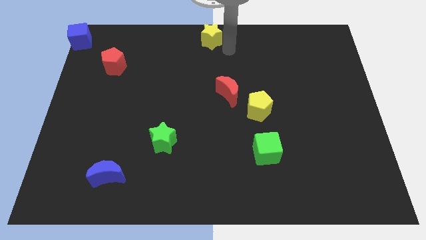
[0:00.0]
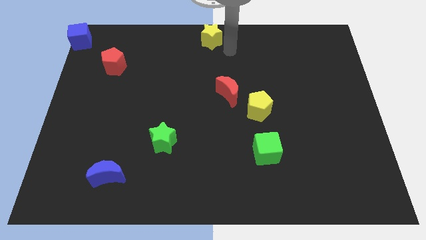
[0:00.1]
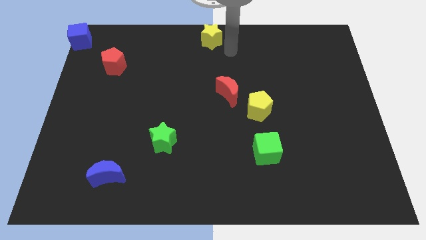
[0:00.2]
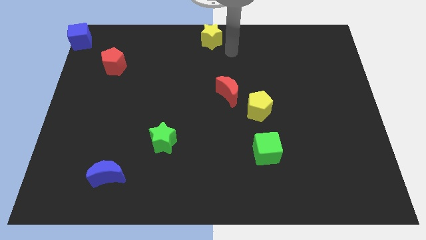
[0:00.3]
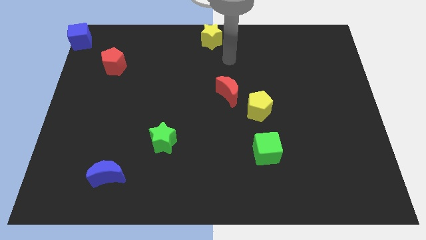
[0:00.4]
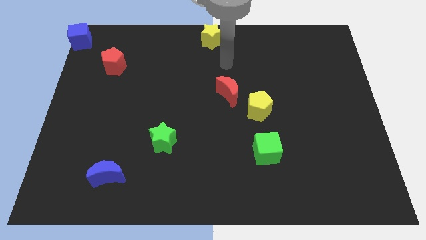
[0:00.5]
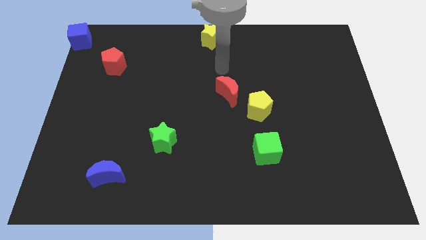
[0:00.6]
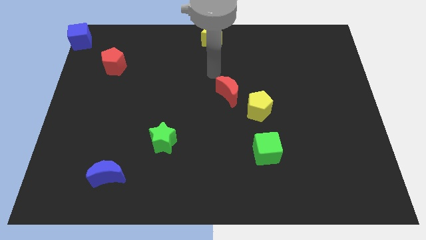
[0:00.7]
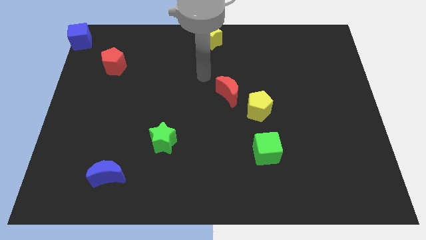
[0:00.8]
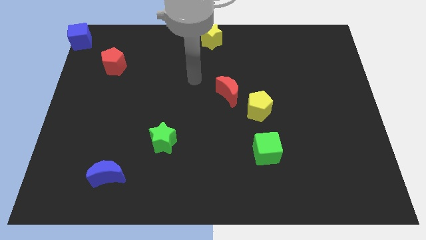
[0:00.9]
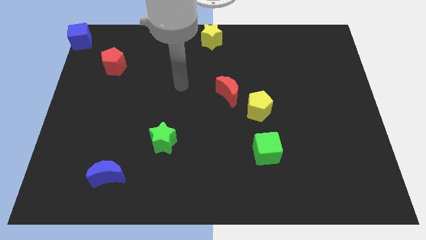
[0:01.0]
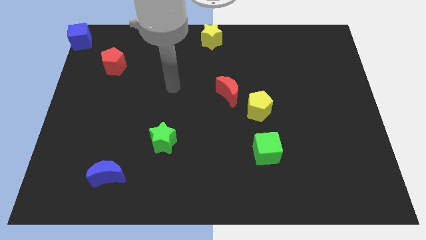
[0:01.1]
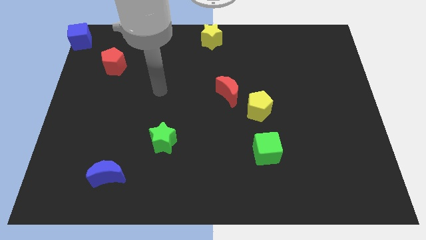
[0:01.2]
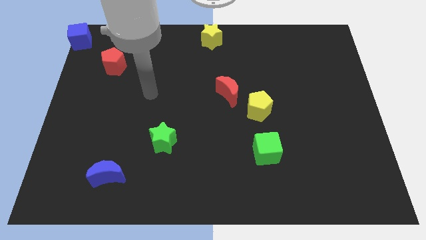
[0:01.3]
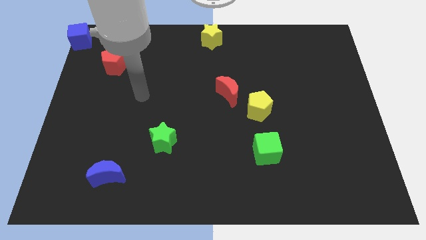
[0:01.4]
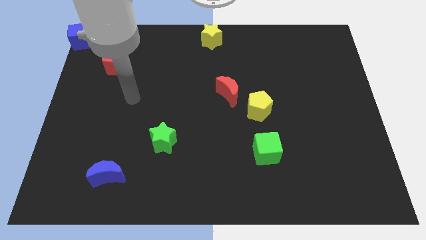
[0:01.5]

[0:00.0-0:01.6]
place your hand in between the red pentagon and green star

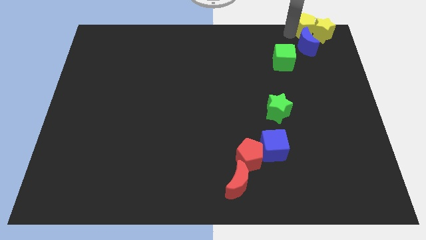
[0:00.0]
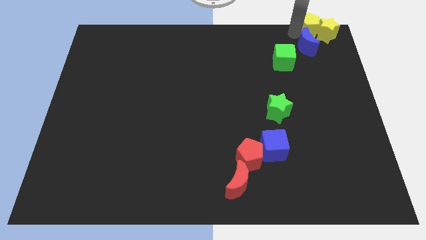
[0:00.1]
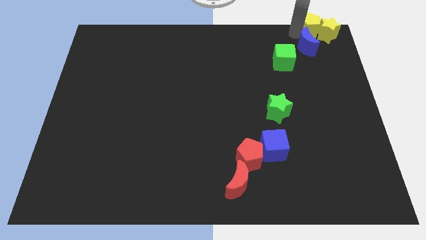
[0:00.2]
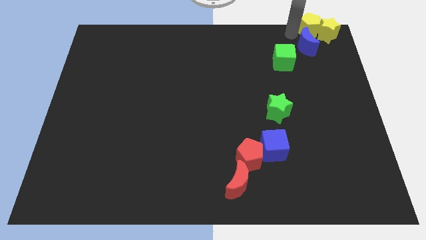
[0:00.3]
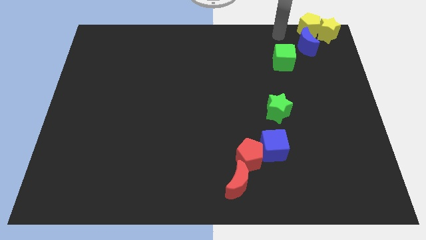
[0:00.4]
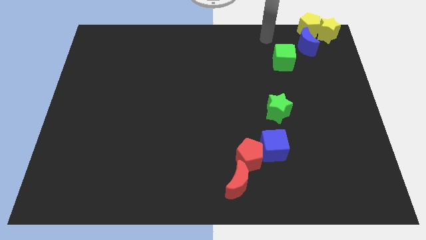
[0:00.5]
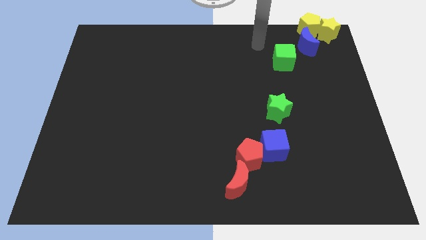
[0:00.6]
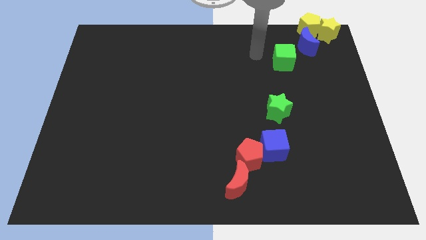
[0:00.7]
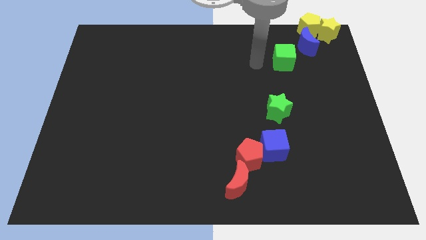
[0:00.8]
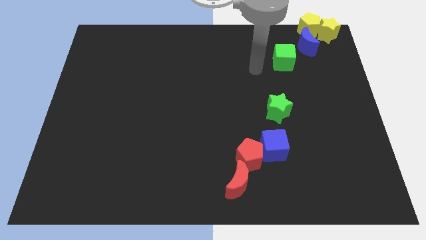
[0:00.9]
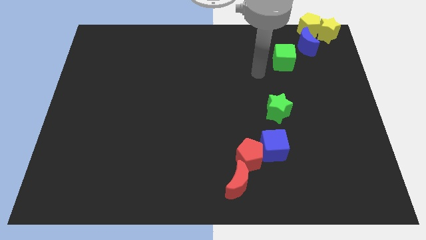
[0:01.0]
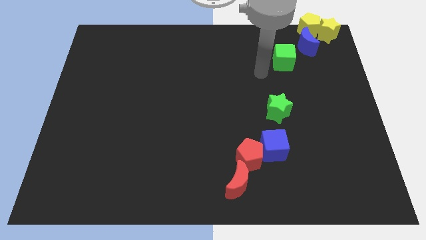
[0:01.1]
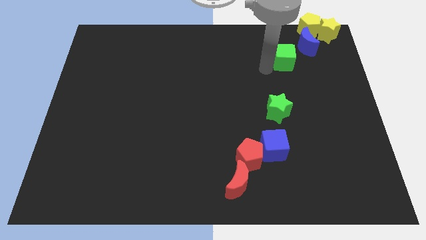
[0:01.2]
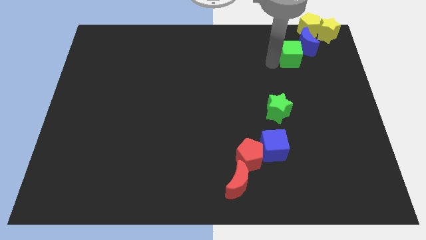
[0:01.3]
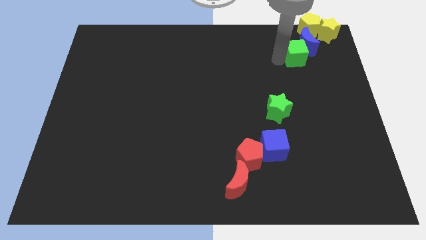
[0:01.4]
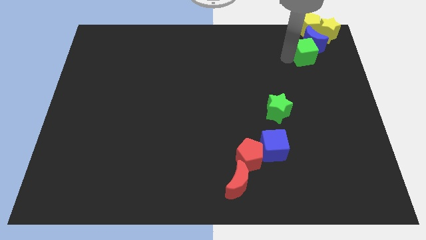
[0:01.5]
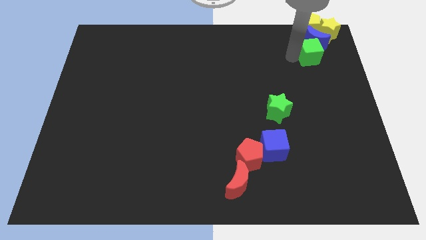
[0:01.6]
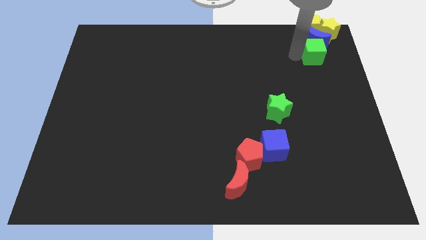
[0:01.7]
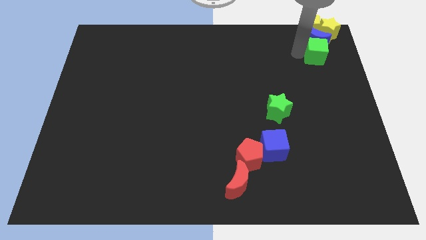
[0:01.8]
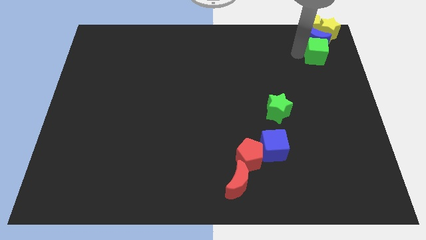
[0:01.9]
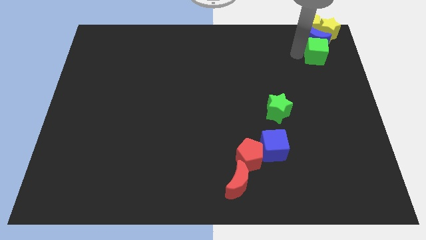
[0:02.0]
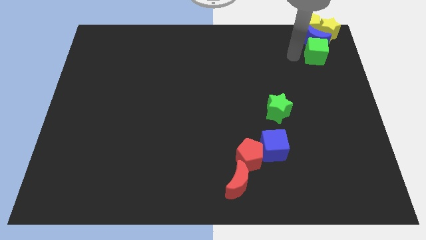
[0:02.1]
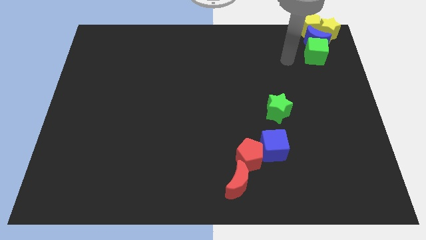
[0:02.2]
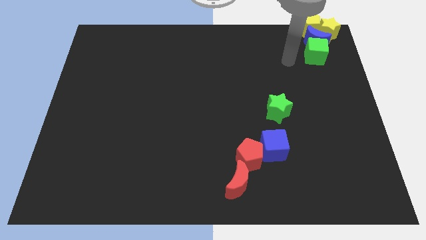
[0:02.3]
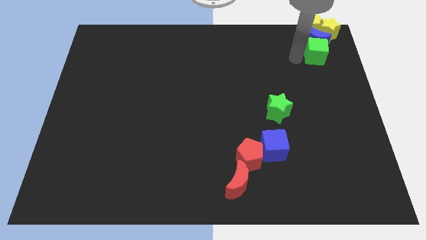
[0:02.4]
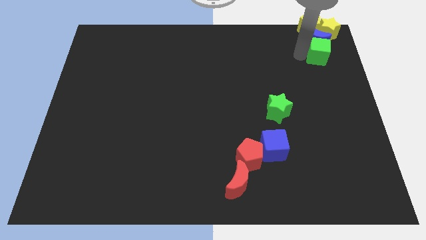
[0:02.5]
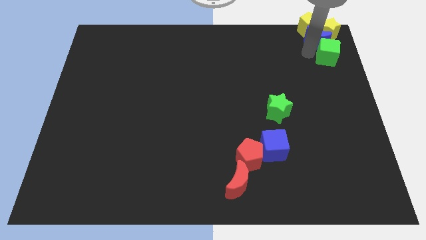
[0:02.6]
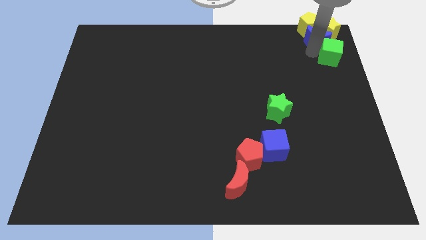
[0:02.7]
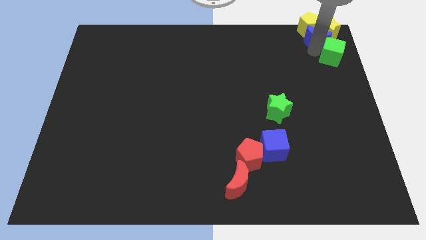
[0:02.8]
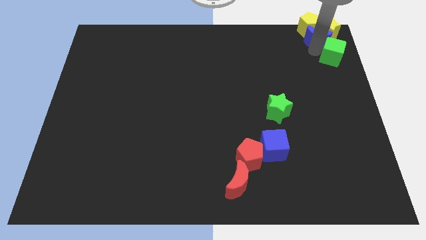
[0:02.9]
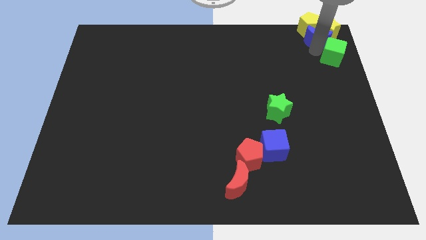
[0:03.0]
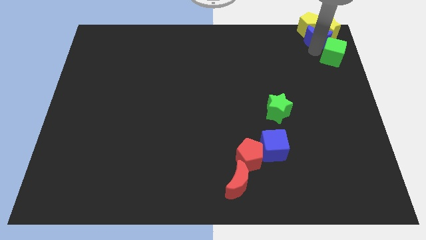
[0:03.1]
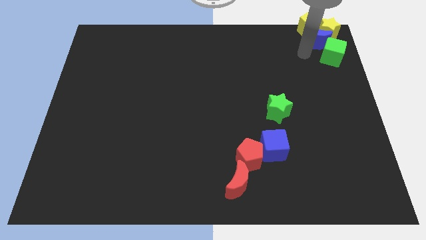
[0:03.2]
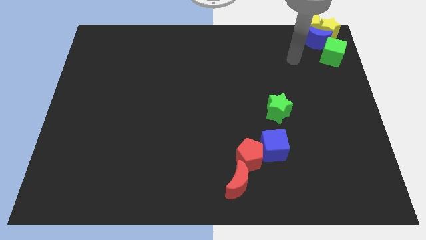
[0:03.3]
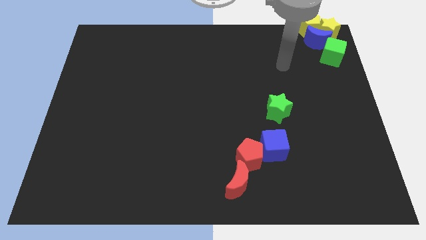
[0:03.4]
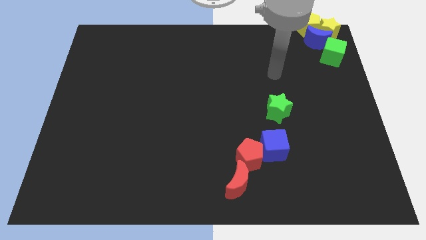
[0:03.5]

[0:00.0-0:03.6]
place green cube below bluue crescent

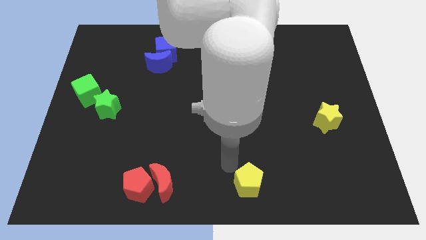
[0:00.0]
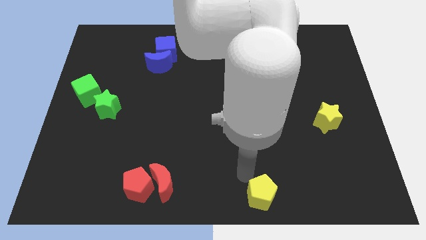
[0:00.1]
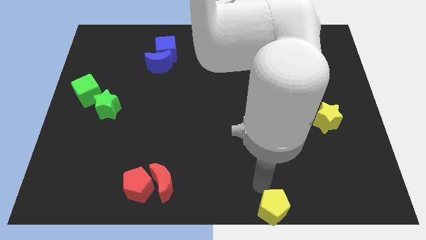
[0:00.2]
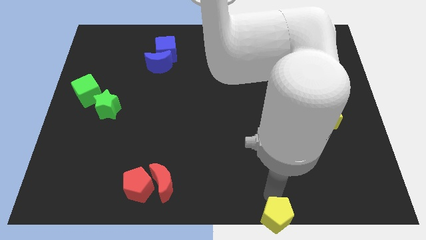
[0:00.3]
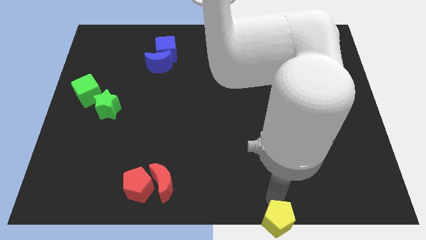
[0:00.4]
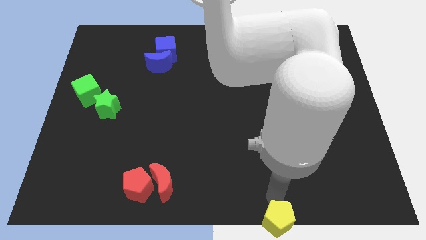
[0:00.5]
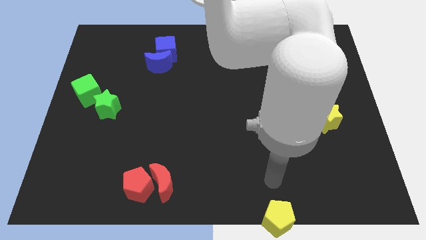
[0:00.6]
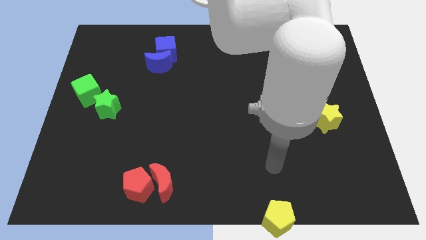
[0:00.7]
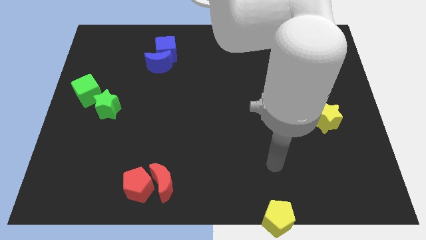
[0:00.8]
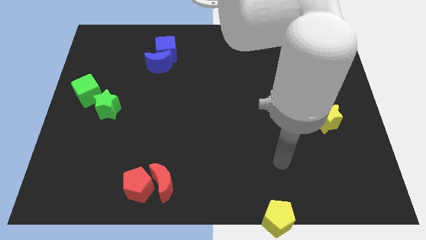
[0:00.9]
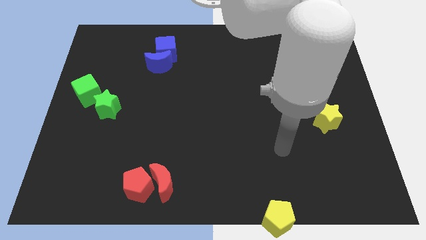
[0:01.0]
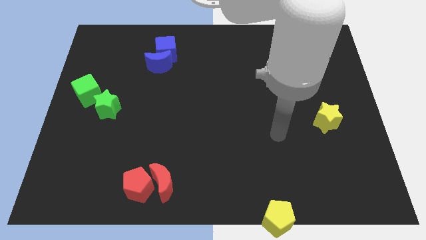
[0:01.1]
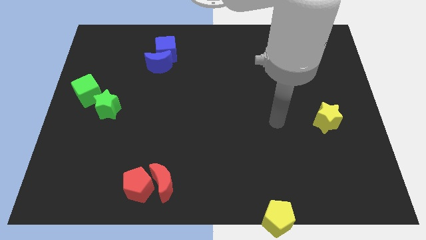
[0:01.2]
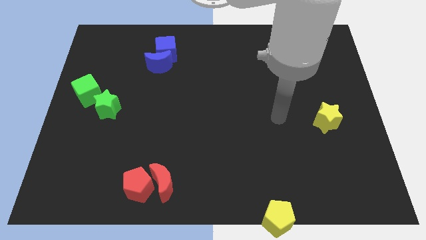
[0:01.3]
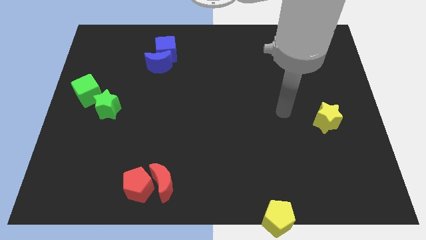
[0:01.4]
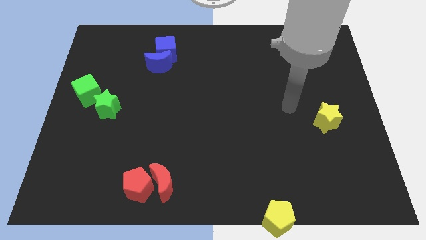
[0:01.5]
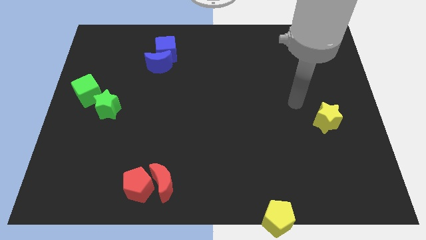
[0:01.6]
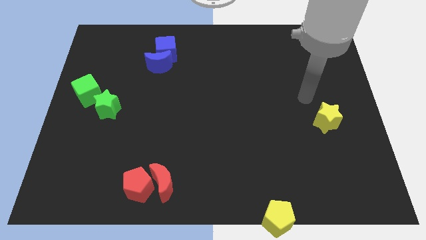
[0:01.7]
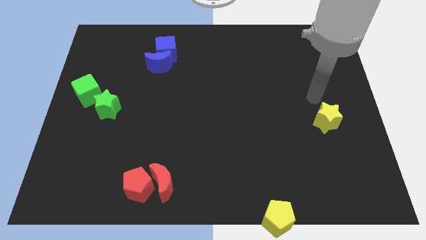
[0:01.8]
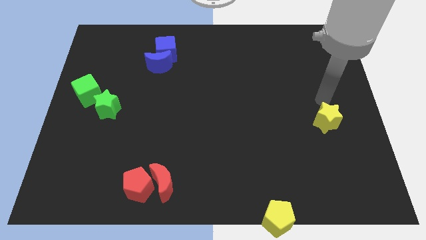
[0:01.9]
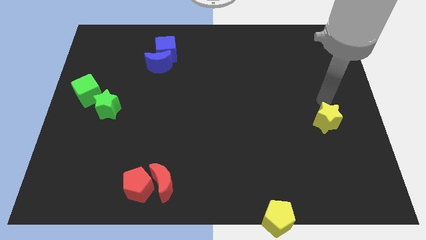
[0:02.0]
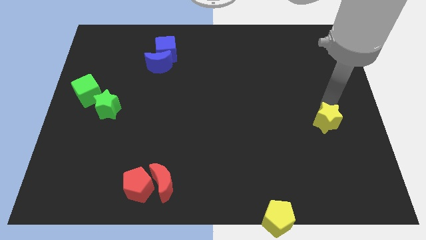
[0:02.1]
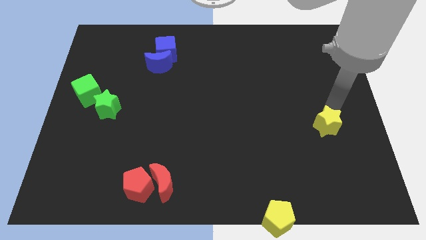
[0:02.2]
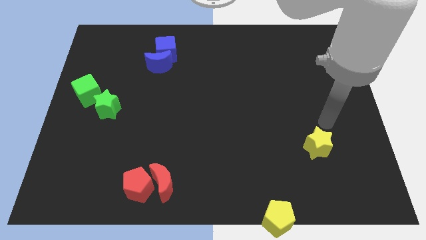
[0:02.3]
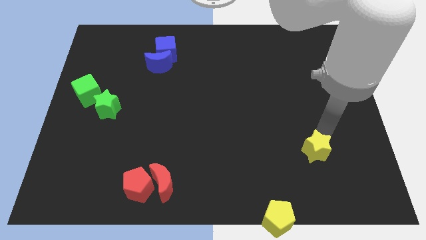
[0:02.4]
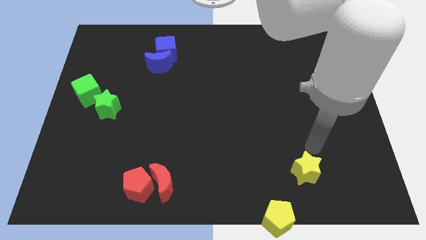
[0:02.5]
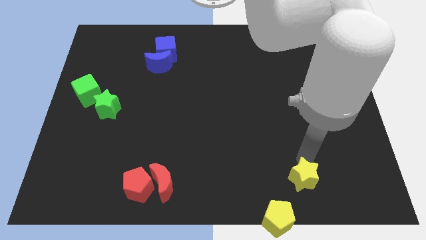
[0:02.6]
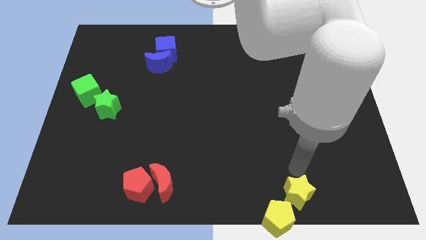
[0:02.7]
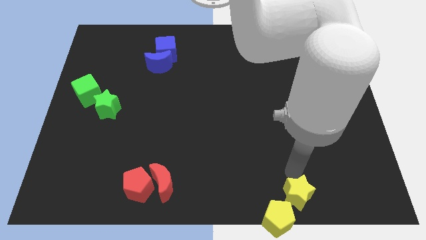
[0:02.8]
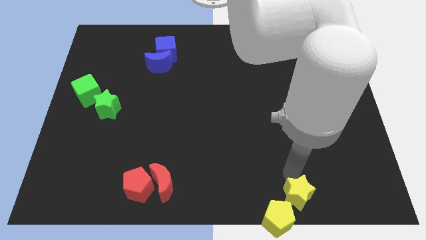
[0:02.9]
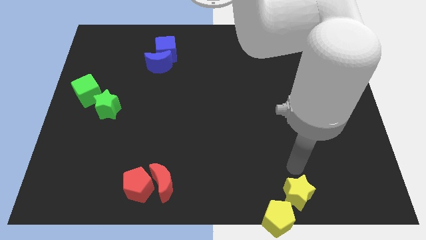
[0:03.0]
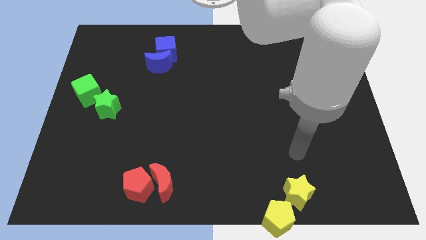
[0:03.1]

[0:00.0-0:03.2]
place the yellow blocks at the bottom of the board

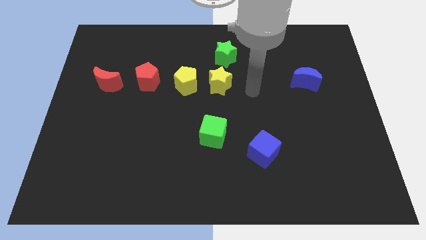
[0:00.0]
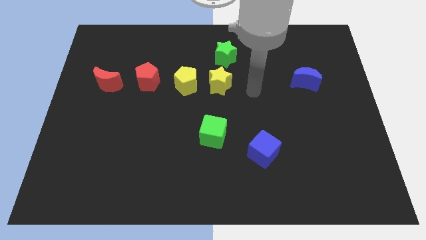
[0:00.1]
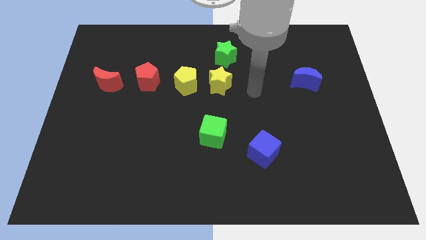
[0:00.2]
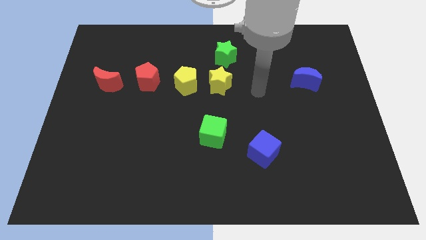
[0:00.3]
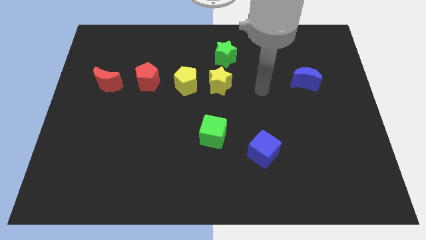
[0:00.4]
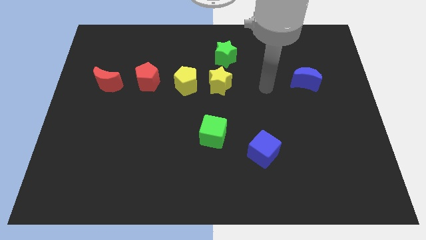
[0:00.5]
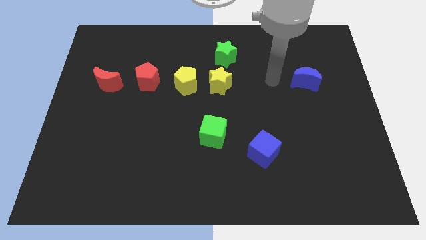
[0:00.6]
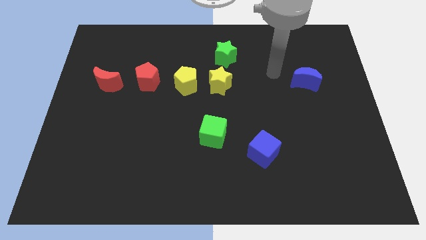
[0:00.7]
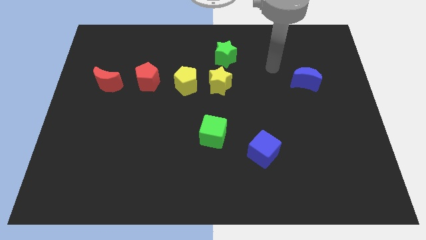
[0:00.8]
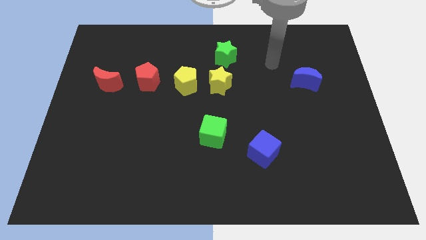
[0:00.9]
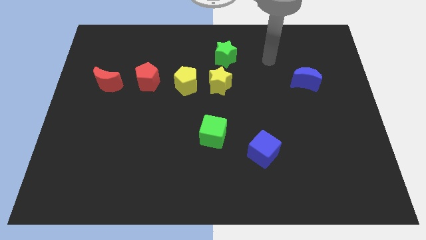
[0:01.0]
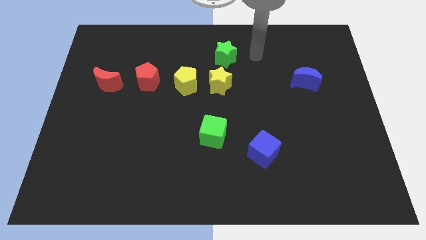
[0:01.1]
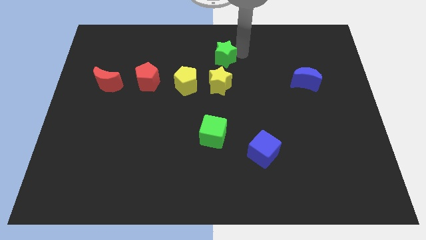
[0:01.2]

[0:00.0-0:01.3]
move your hand towardsthe green star
